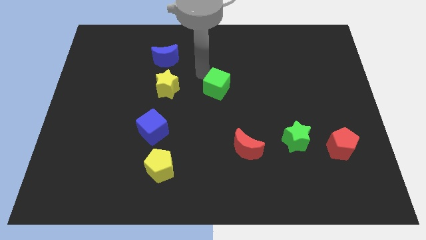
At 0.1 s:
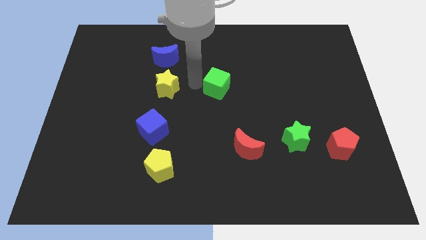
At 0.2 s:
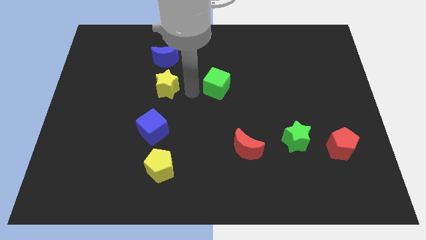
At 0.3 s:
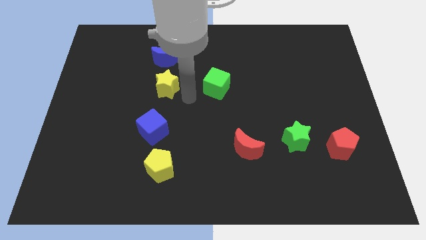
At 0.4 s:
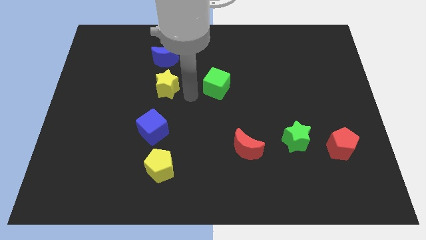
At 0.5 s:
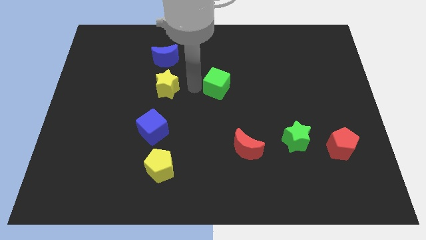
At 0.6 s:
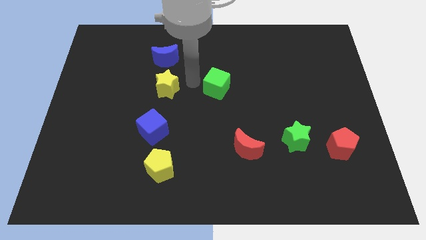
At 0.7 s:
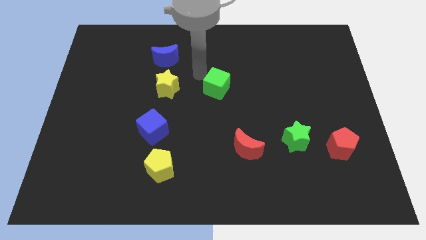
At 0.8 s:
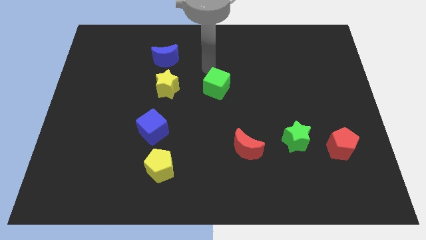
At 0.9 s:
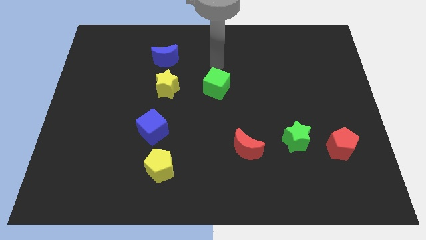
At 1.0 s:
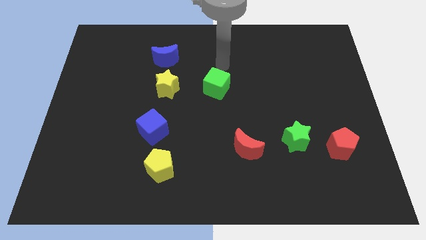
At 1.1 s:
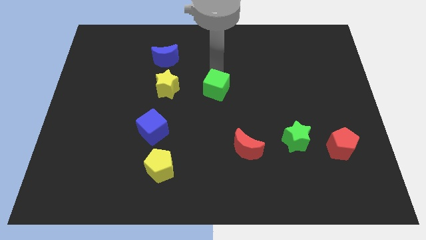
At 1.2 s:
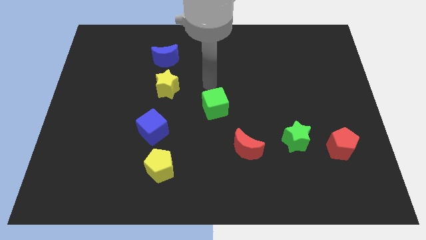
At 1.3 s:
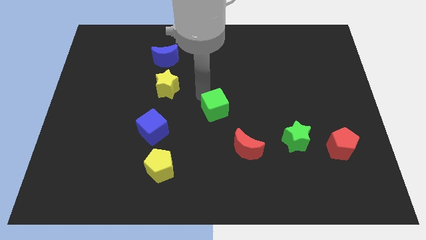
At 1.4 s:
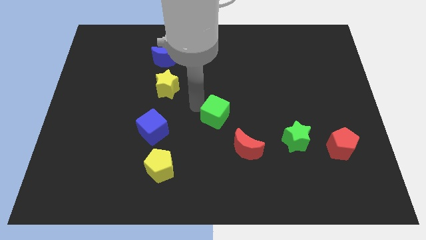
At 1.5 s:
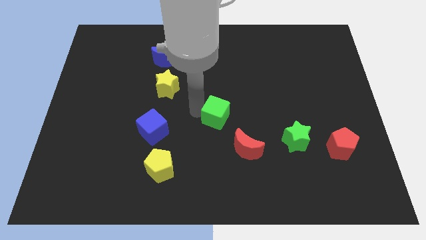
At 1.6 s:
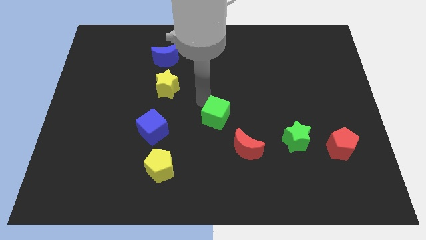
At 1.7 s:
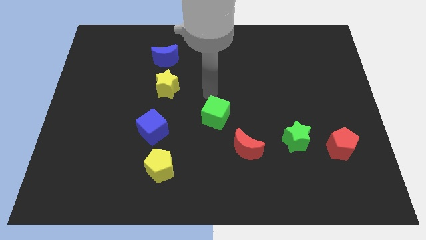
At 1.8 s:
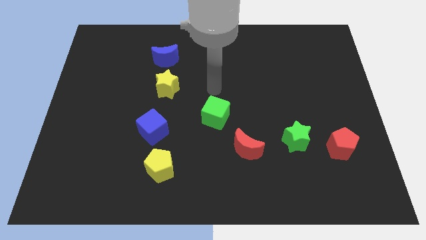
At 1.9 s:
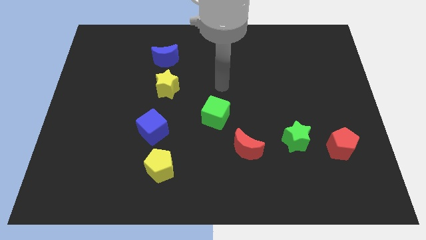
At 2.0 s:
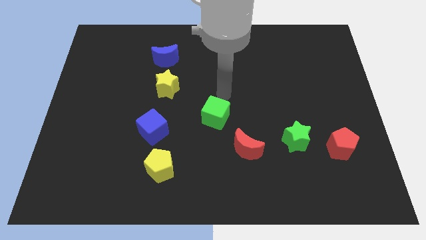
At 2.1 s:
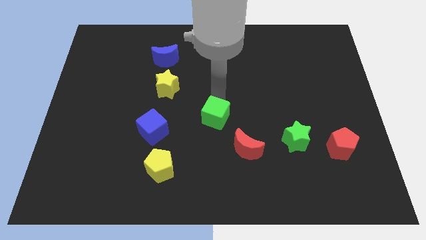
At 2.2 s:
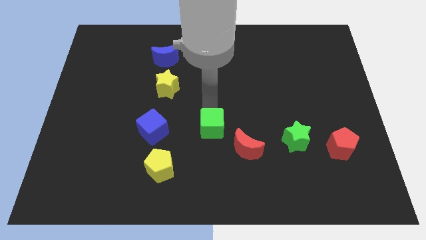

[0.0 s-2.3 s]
place green cube beside blue cube

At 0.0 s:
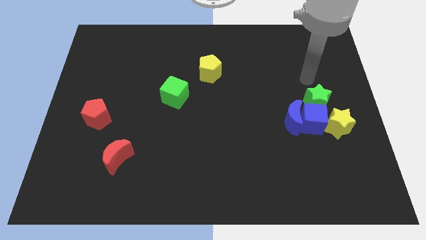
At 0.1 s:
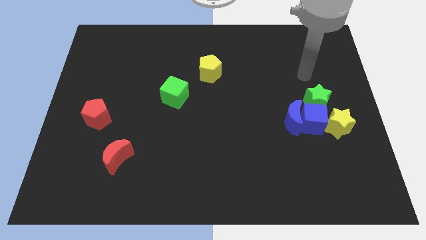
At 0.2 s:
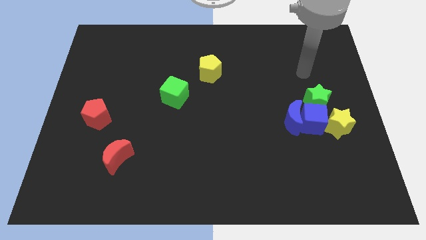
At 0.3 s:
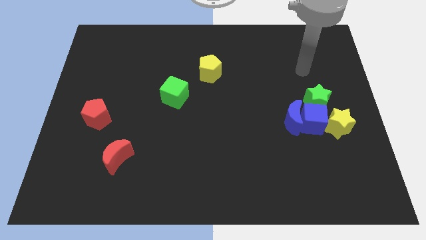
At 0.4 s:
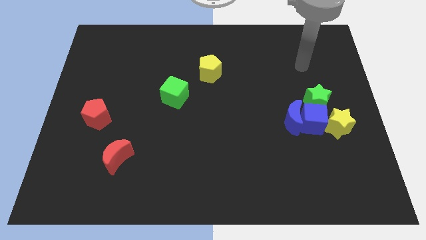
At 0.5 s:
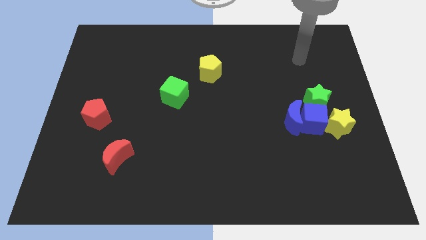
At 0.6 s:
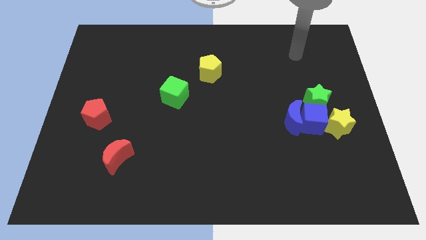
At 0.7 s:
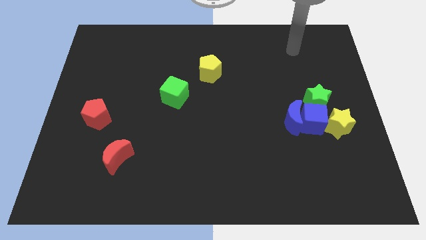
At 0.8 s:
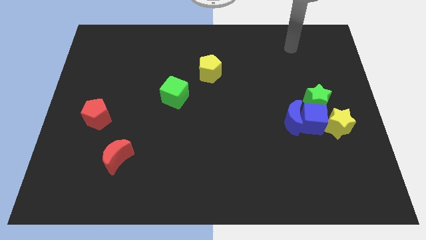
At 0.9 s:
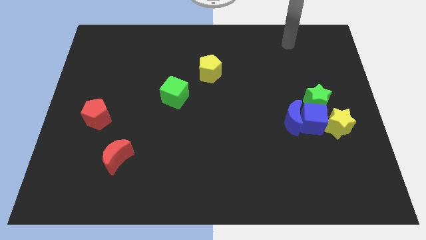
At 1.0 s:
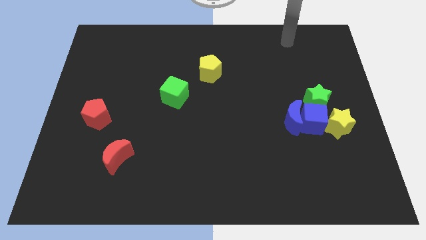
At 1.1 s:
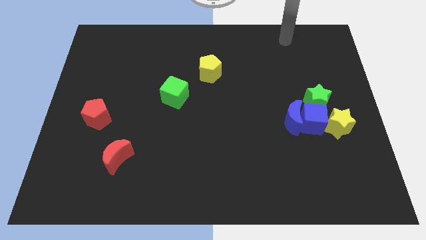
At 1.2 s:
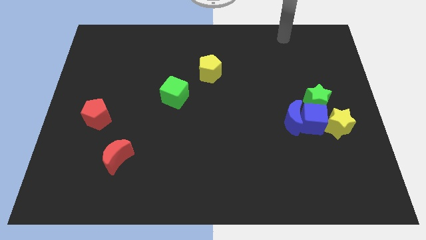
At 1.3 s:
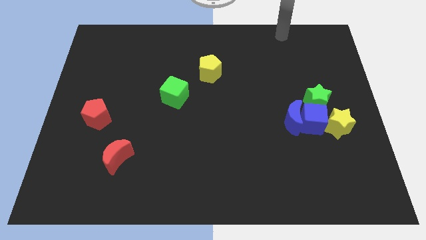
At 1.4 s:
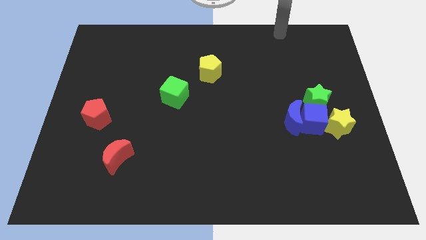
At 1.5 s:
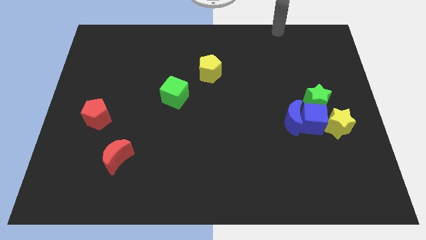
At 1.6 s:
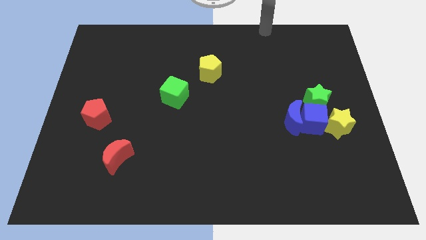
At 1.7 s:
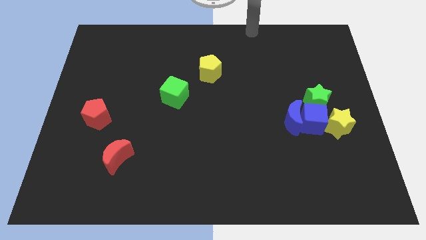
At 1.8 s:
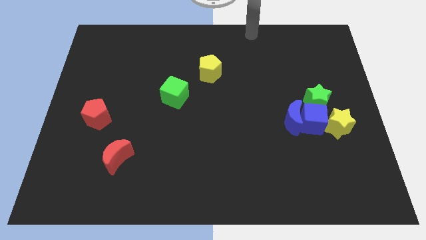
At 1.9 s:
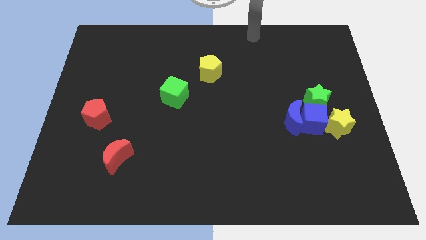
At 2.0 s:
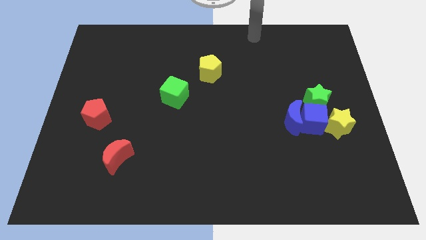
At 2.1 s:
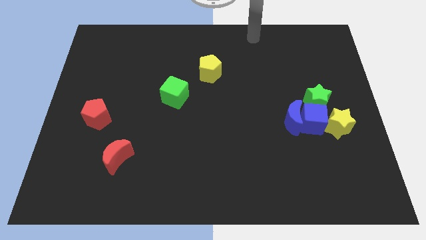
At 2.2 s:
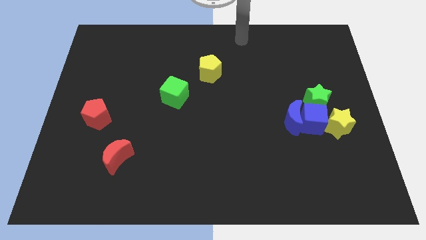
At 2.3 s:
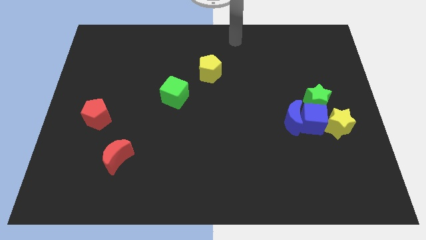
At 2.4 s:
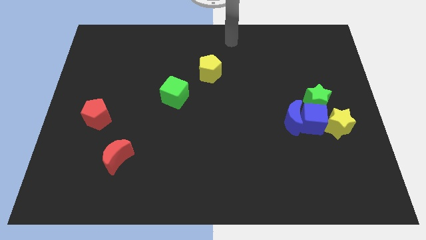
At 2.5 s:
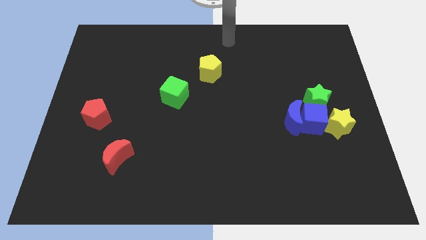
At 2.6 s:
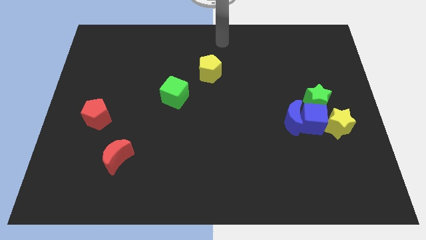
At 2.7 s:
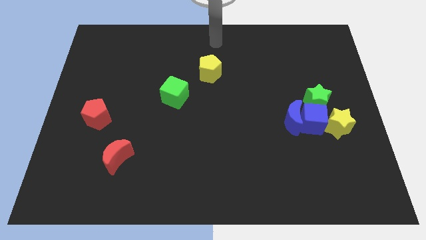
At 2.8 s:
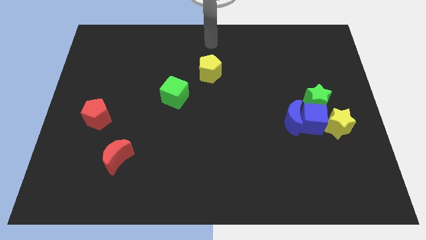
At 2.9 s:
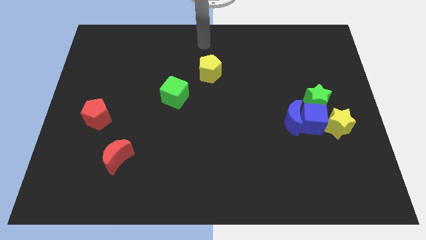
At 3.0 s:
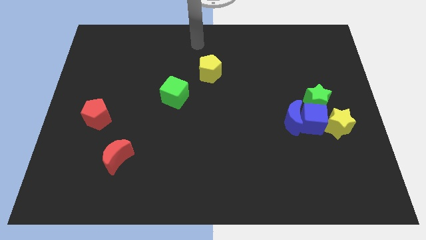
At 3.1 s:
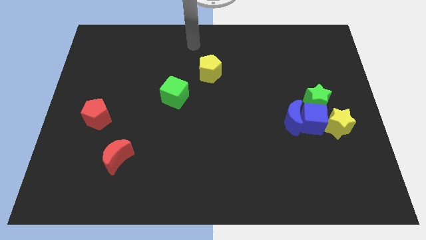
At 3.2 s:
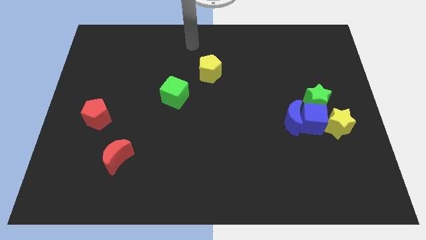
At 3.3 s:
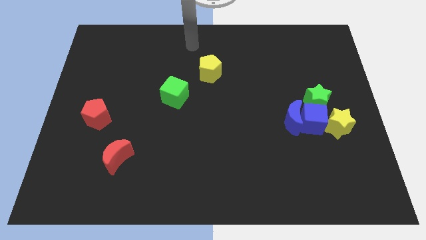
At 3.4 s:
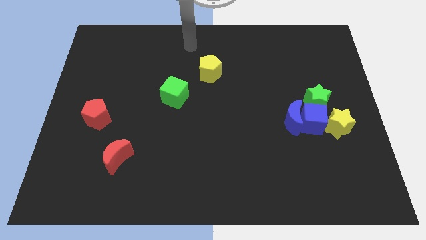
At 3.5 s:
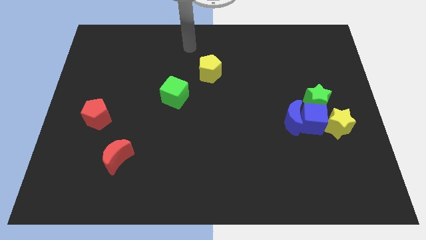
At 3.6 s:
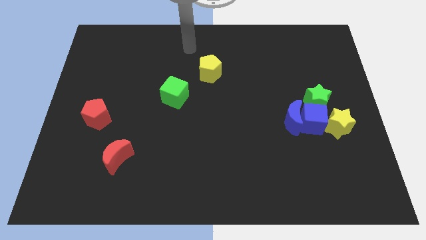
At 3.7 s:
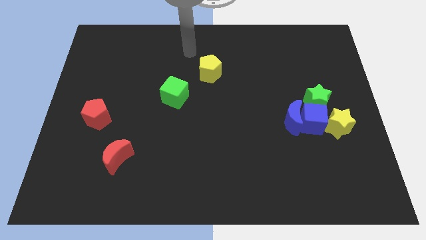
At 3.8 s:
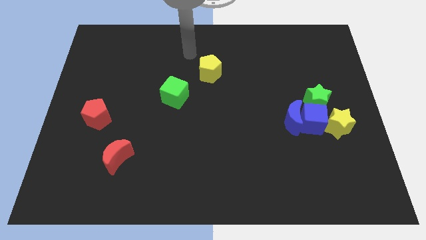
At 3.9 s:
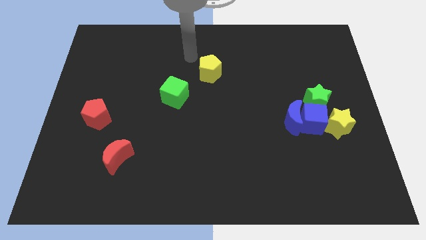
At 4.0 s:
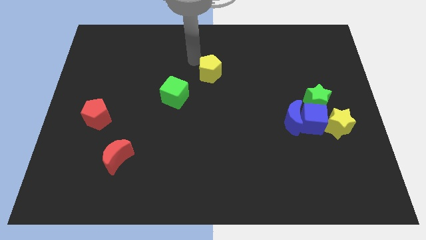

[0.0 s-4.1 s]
point the arm at the top left of the yellow pentagon

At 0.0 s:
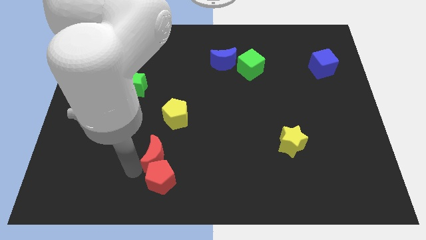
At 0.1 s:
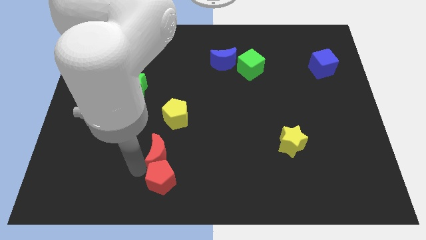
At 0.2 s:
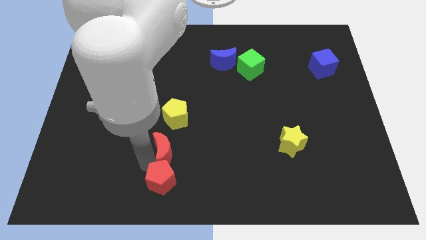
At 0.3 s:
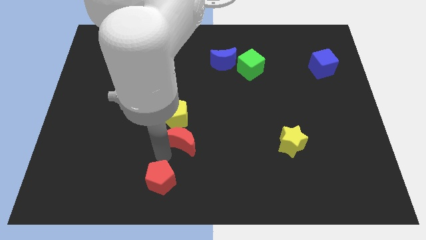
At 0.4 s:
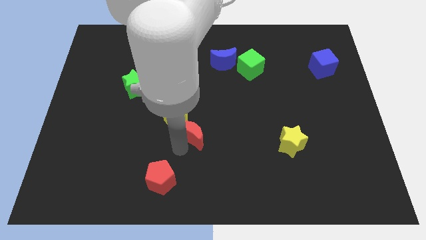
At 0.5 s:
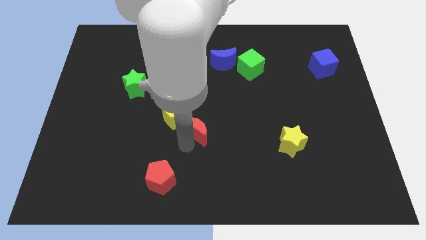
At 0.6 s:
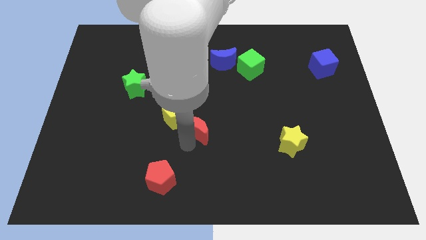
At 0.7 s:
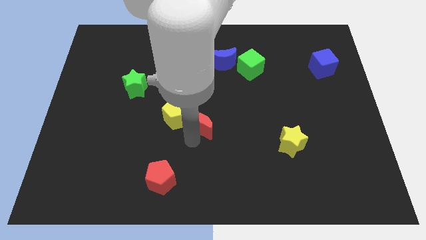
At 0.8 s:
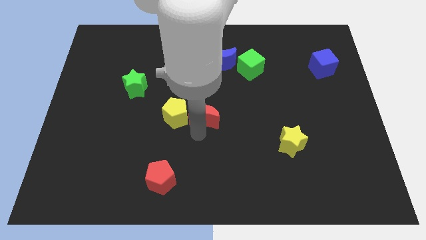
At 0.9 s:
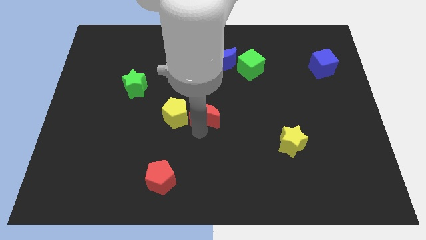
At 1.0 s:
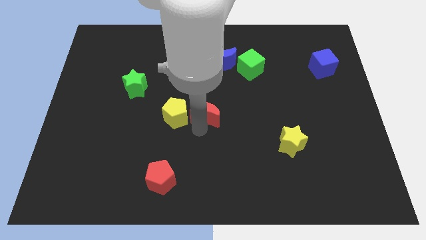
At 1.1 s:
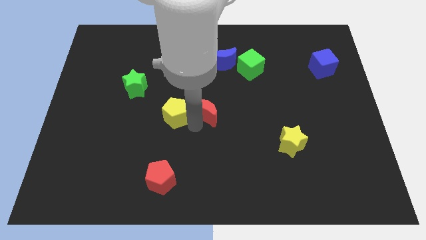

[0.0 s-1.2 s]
push the red crescent to the center of the board

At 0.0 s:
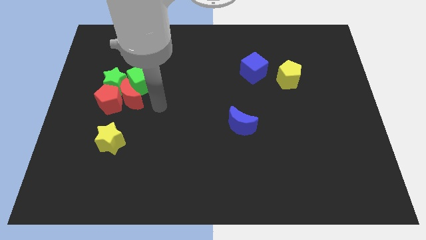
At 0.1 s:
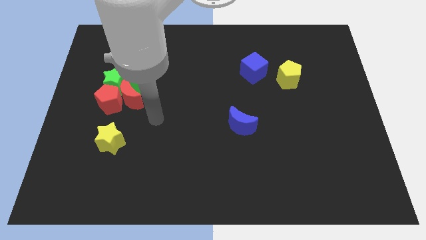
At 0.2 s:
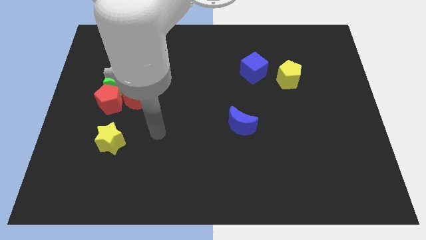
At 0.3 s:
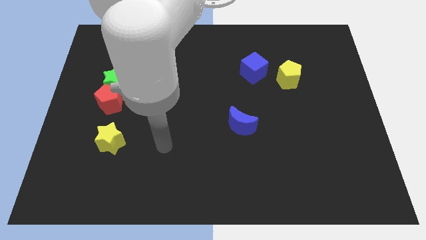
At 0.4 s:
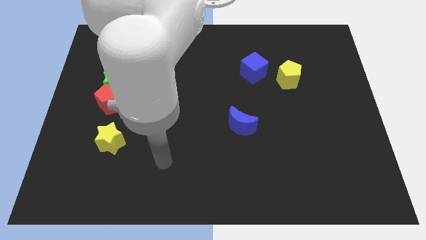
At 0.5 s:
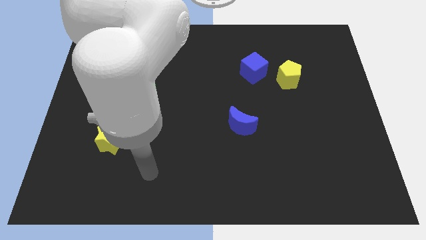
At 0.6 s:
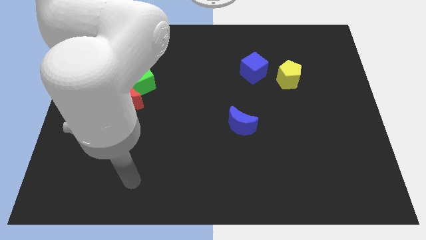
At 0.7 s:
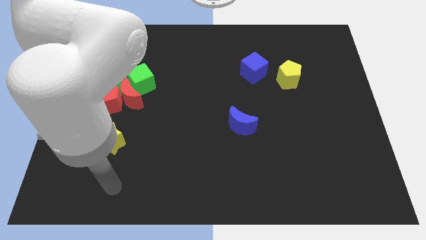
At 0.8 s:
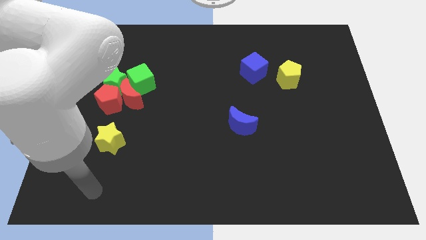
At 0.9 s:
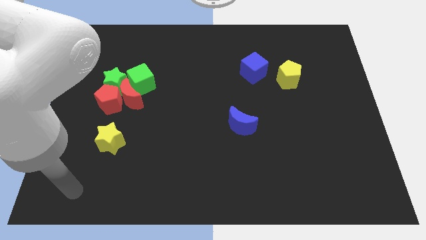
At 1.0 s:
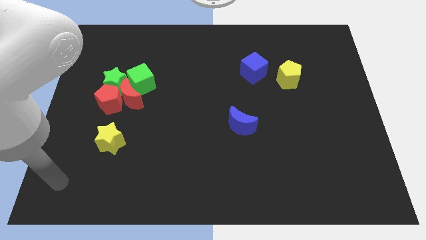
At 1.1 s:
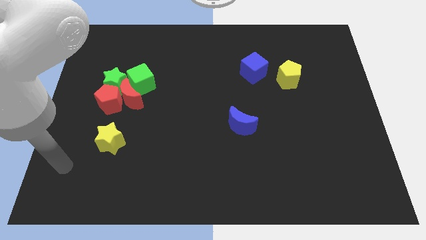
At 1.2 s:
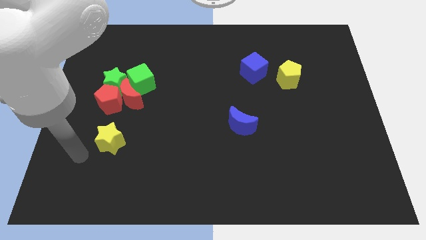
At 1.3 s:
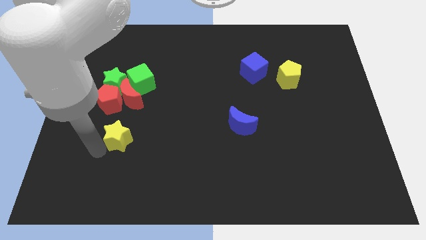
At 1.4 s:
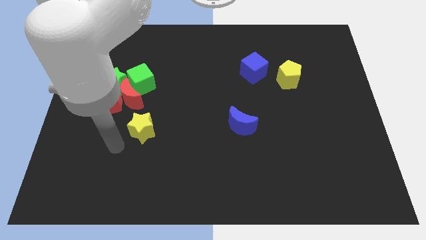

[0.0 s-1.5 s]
move the yellow star below the red crescent
